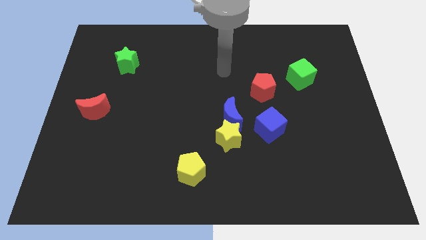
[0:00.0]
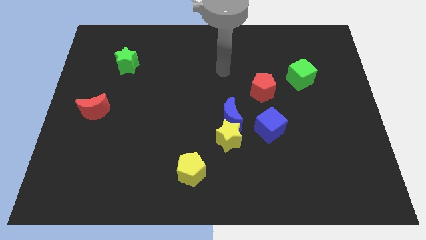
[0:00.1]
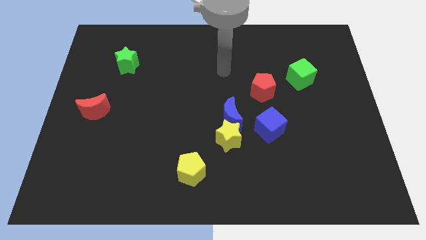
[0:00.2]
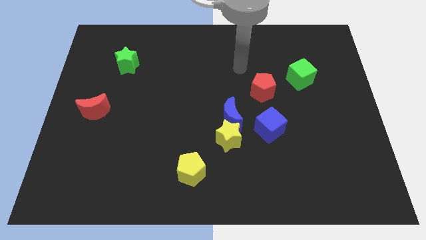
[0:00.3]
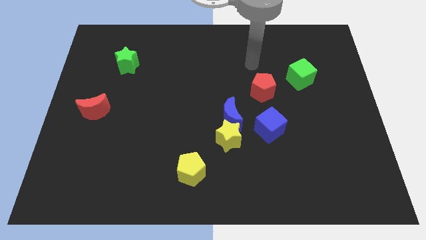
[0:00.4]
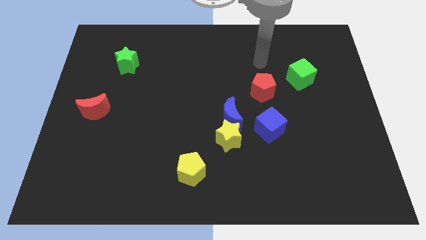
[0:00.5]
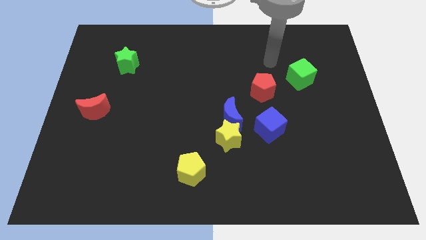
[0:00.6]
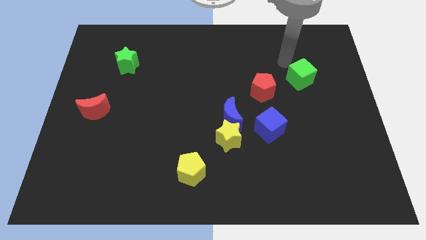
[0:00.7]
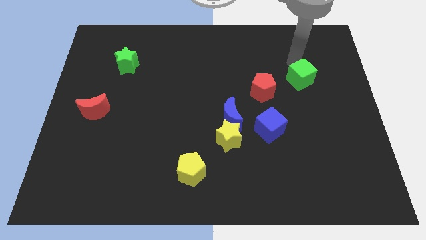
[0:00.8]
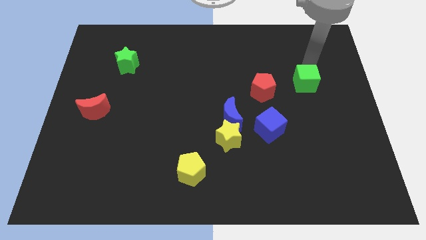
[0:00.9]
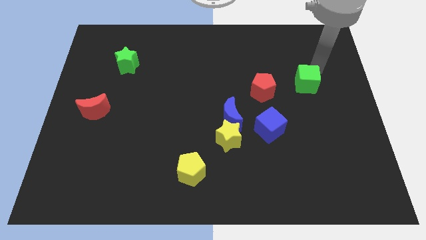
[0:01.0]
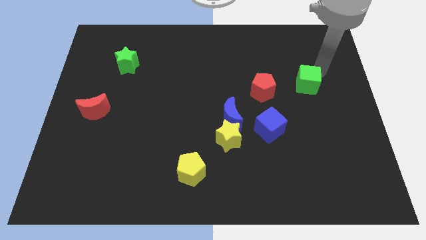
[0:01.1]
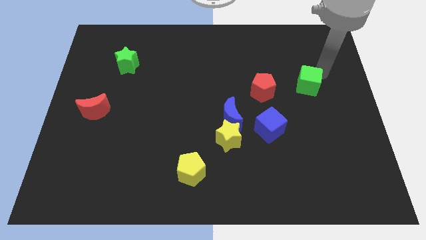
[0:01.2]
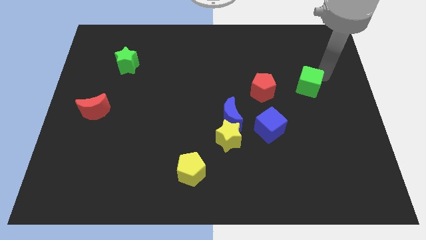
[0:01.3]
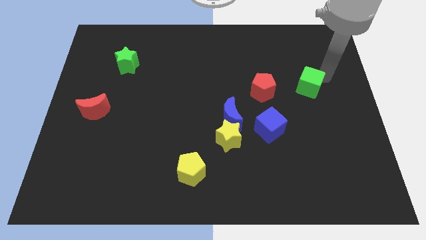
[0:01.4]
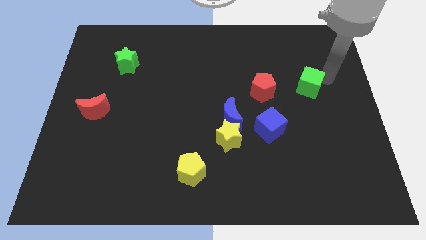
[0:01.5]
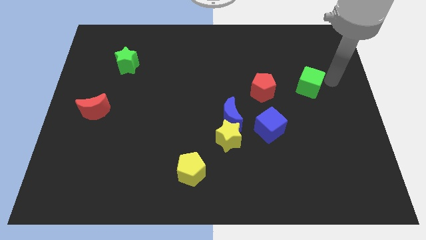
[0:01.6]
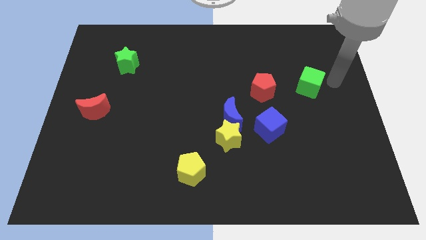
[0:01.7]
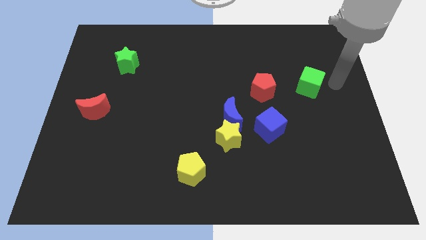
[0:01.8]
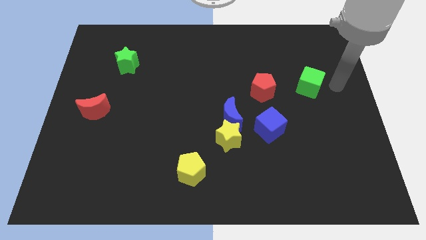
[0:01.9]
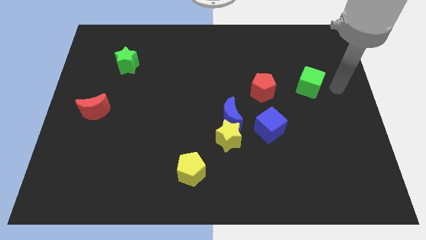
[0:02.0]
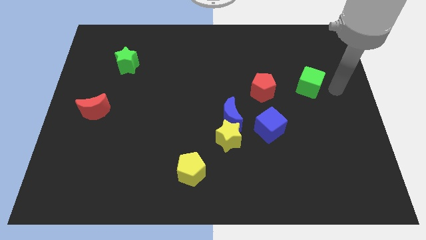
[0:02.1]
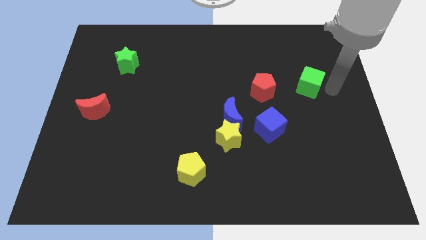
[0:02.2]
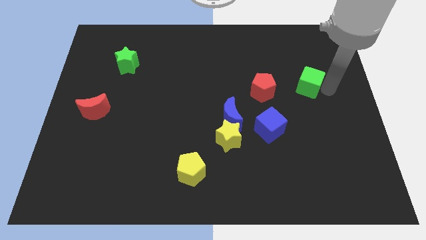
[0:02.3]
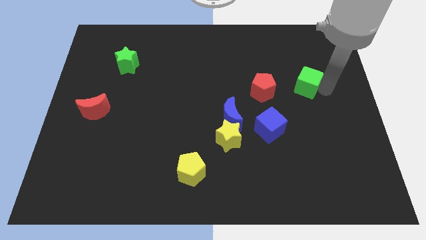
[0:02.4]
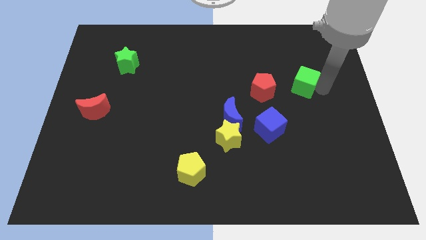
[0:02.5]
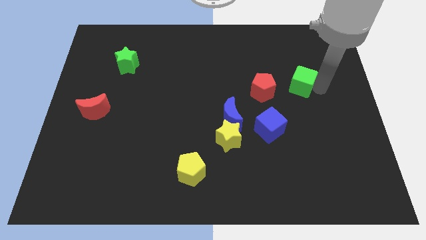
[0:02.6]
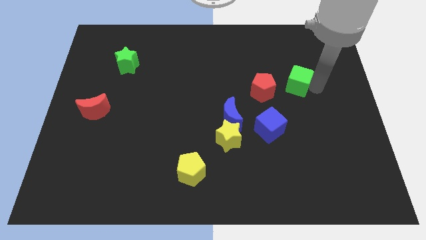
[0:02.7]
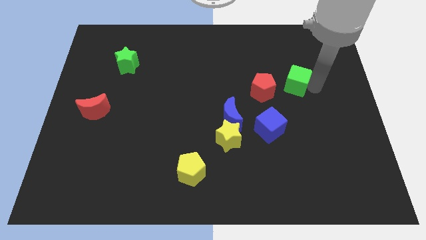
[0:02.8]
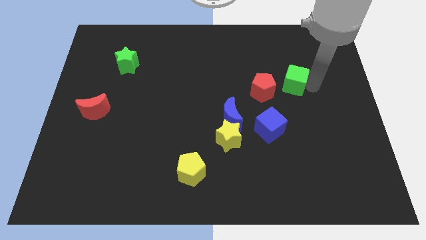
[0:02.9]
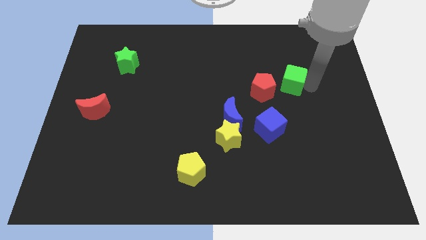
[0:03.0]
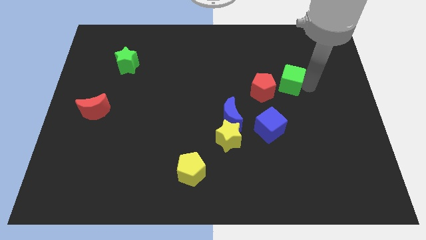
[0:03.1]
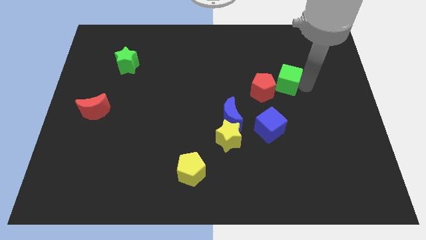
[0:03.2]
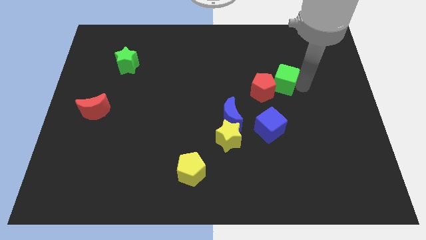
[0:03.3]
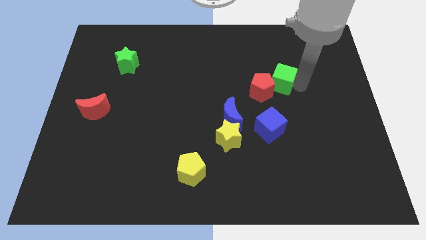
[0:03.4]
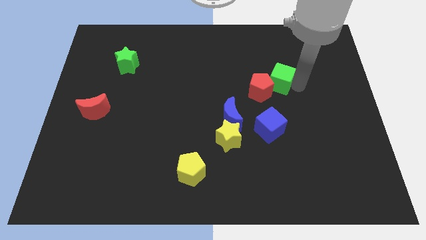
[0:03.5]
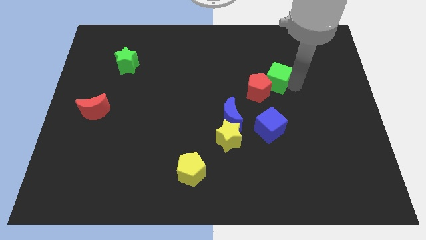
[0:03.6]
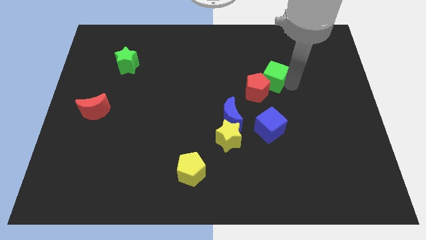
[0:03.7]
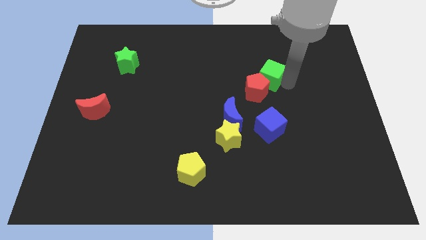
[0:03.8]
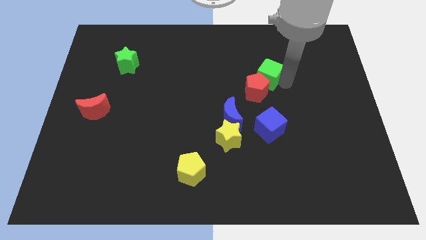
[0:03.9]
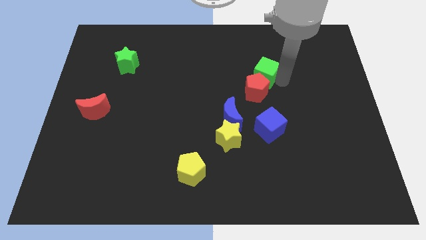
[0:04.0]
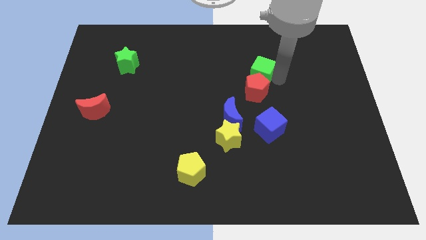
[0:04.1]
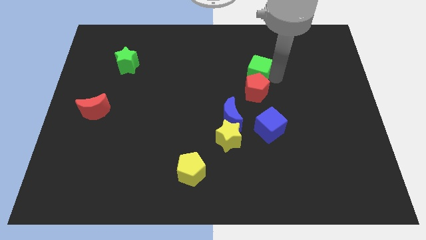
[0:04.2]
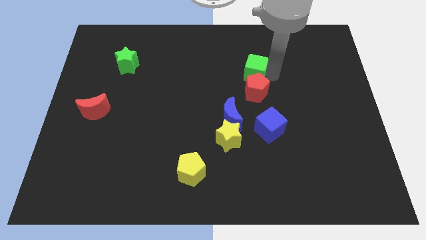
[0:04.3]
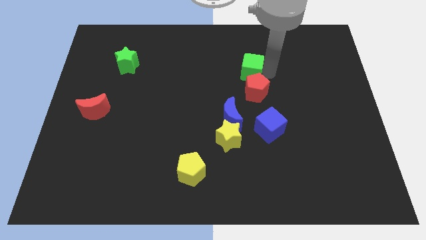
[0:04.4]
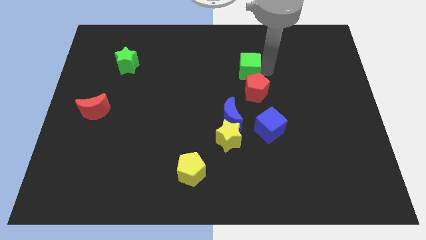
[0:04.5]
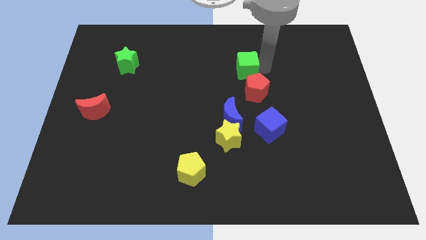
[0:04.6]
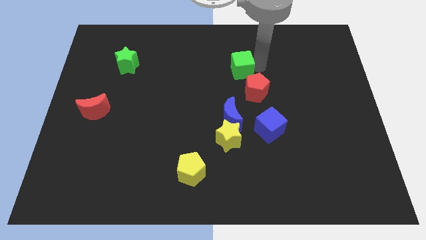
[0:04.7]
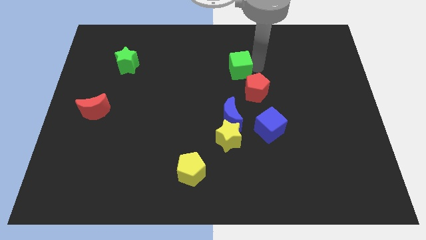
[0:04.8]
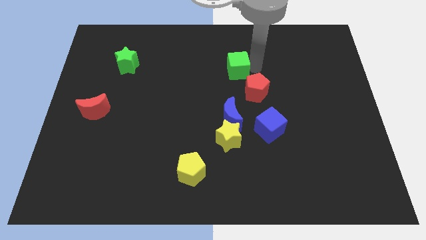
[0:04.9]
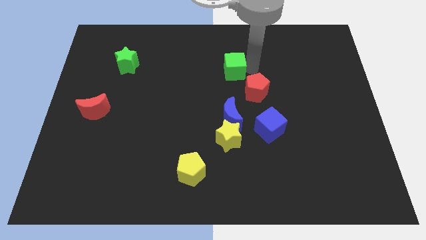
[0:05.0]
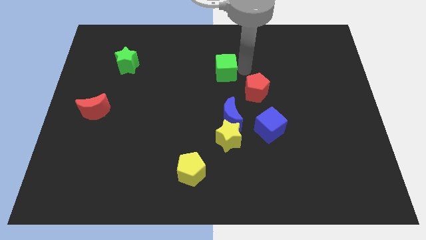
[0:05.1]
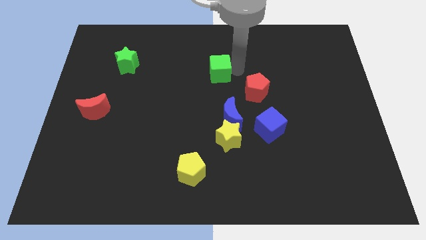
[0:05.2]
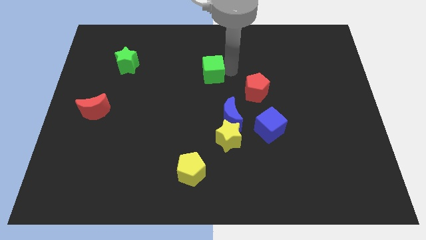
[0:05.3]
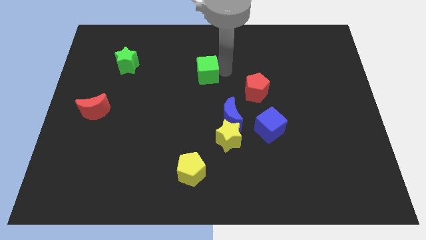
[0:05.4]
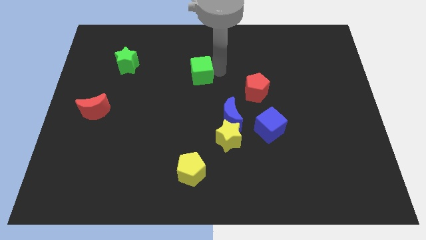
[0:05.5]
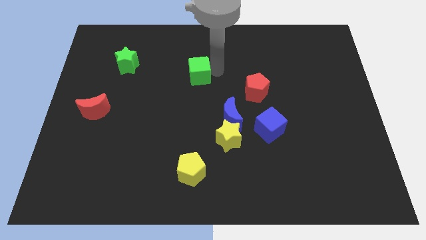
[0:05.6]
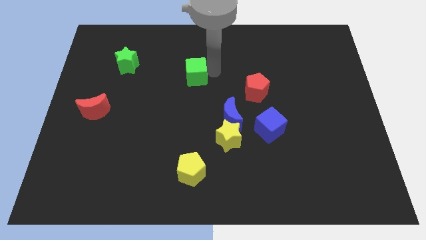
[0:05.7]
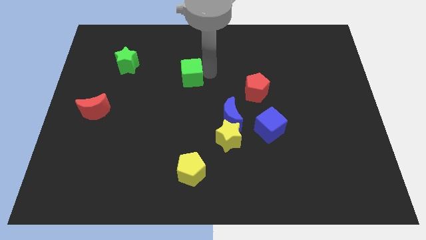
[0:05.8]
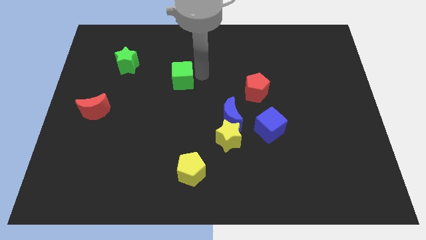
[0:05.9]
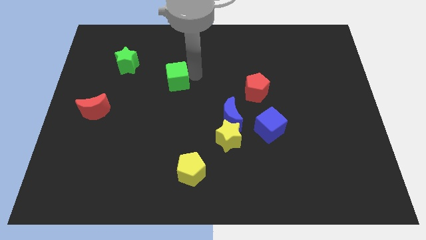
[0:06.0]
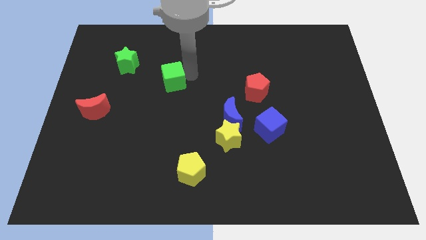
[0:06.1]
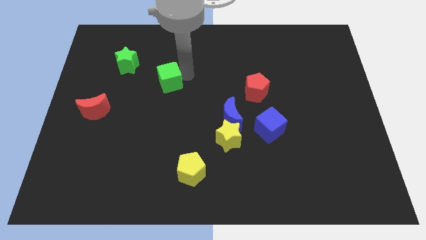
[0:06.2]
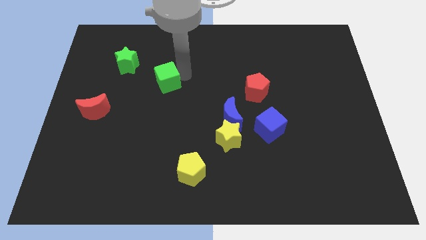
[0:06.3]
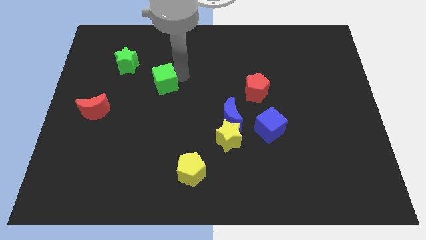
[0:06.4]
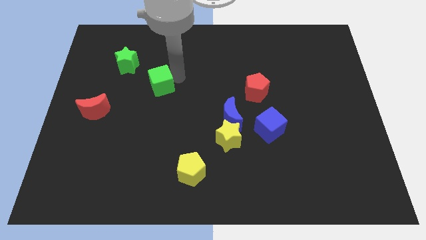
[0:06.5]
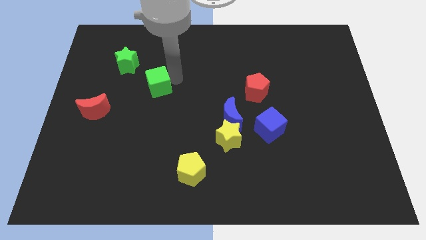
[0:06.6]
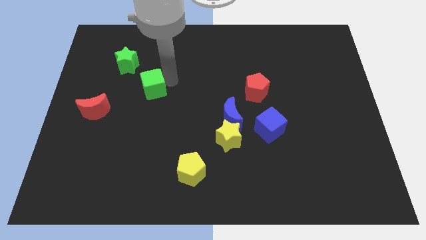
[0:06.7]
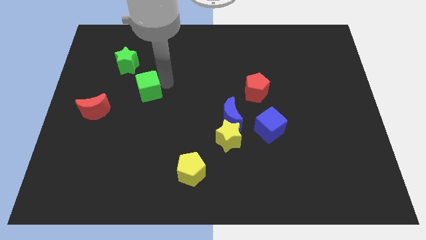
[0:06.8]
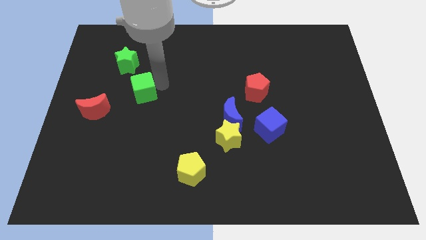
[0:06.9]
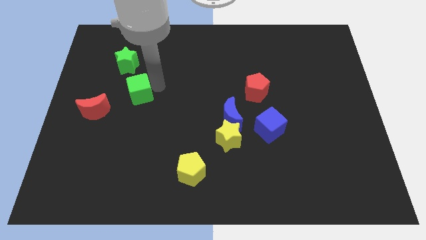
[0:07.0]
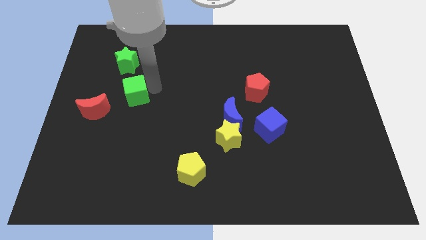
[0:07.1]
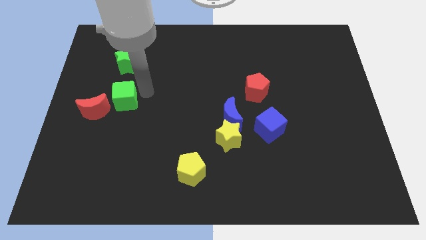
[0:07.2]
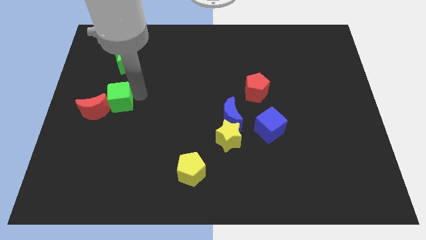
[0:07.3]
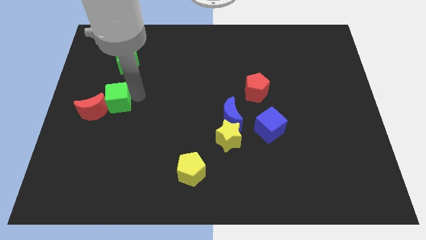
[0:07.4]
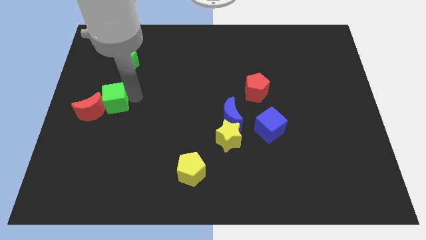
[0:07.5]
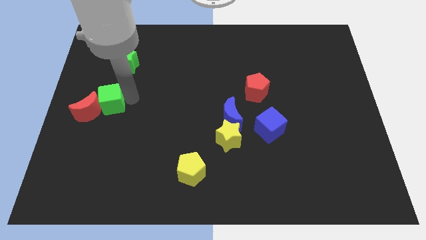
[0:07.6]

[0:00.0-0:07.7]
put the green cube next to the red moon

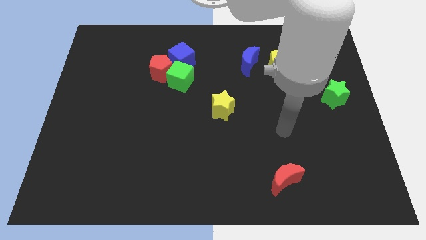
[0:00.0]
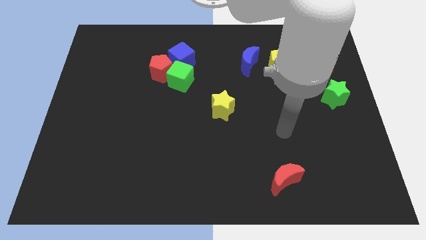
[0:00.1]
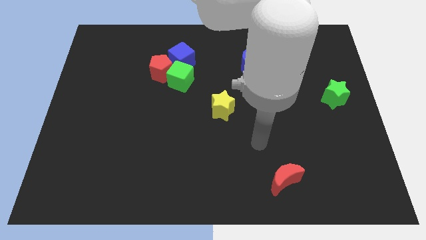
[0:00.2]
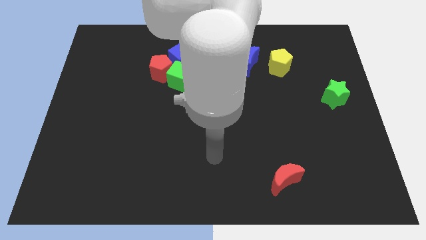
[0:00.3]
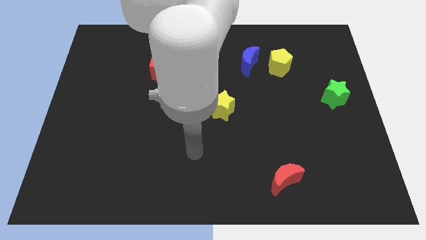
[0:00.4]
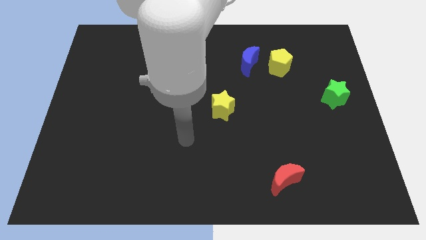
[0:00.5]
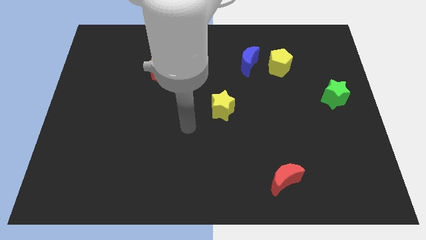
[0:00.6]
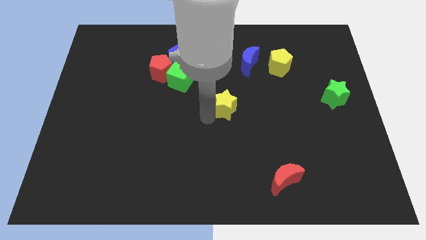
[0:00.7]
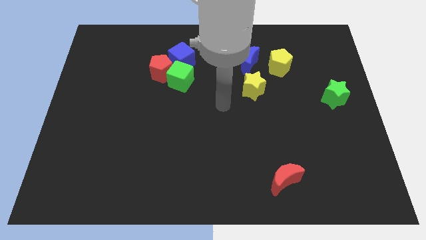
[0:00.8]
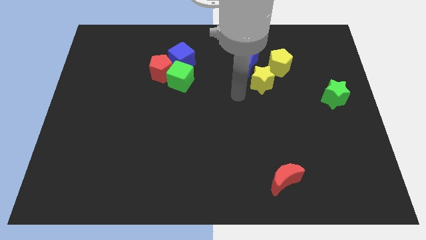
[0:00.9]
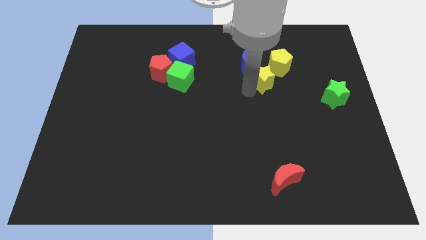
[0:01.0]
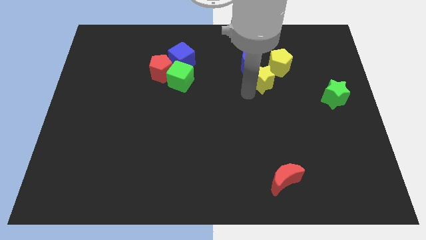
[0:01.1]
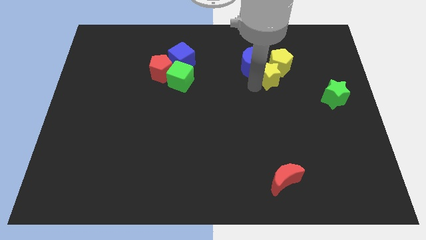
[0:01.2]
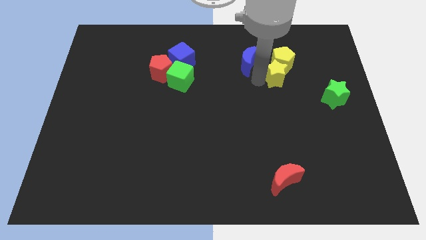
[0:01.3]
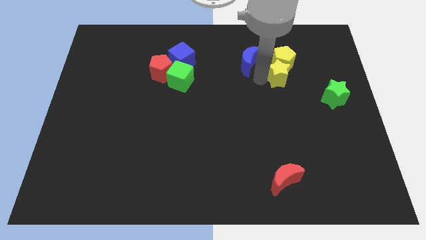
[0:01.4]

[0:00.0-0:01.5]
push the yellow star to the yellow pentagon
